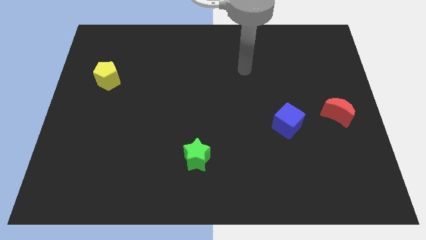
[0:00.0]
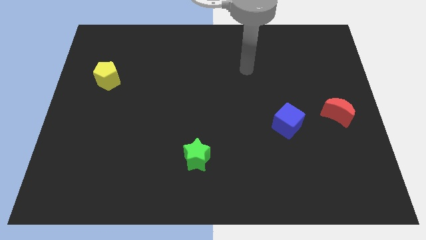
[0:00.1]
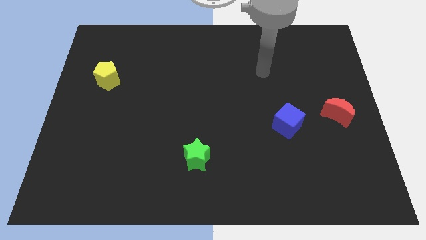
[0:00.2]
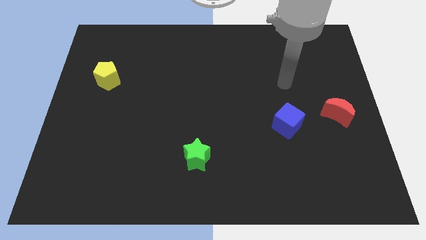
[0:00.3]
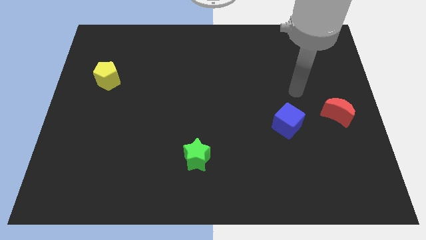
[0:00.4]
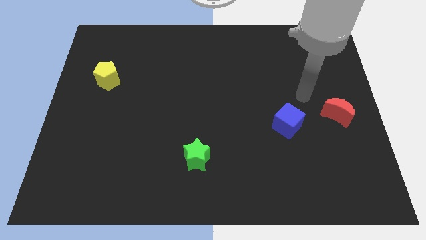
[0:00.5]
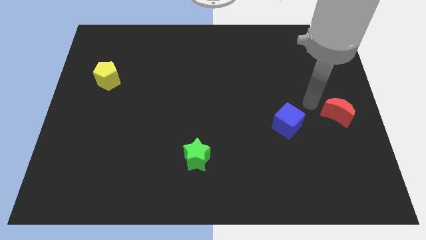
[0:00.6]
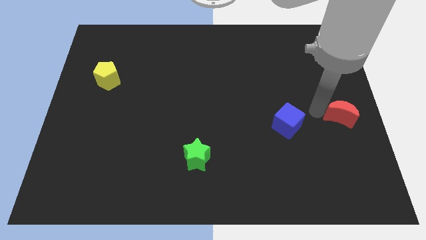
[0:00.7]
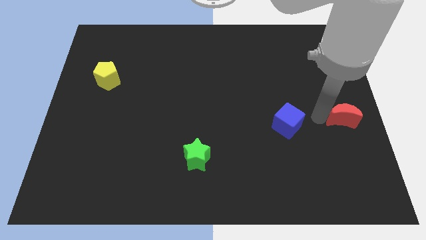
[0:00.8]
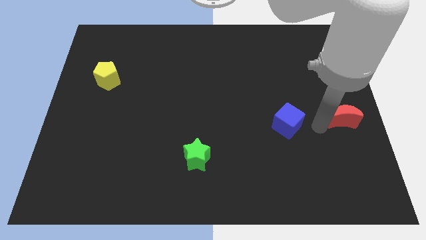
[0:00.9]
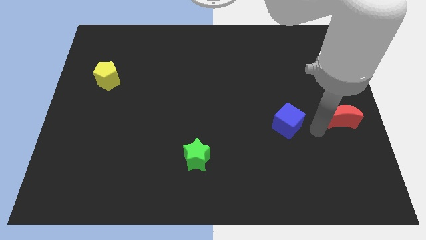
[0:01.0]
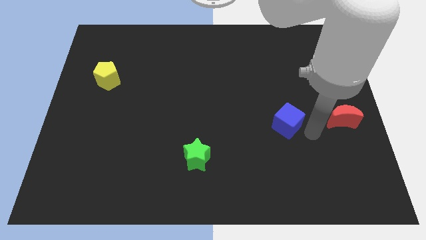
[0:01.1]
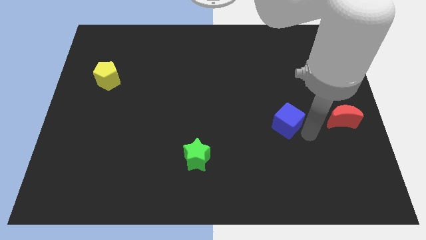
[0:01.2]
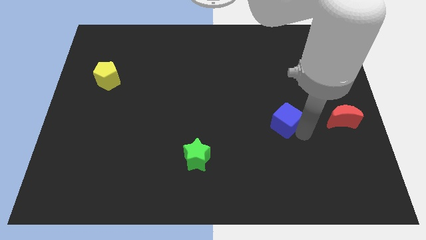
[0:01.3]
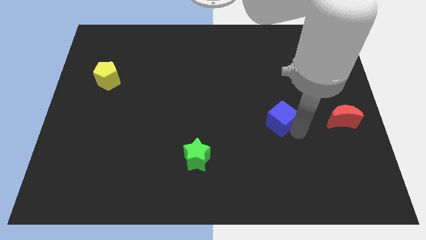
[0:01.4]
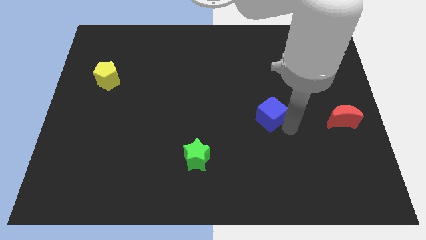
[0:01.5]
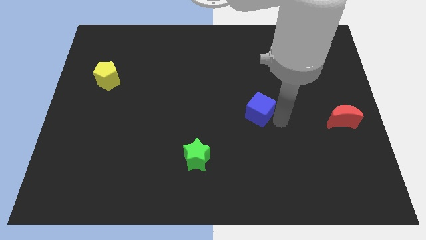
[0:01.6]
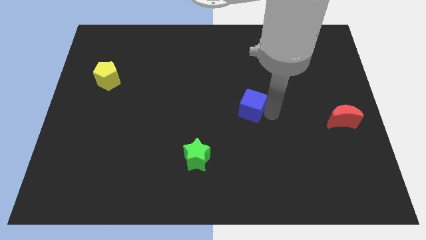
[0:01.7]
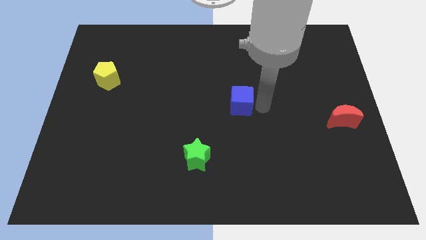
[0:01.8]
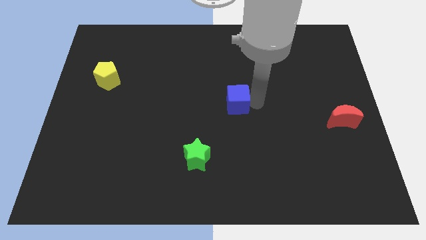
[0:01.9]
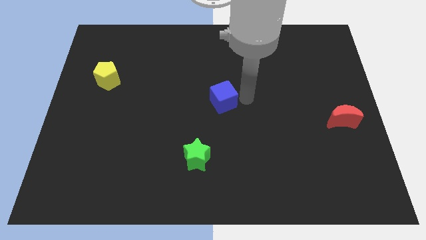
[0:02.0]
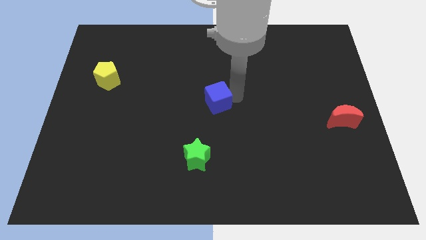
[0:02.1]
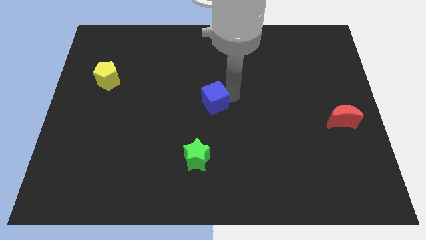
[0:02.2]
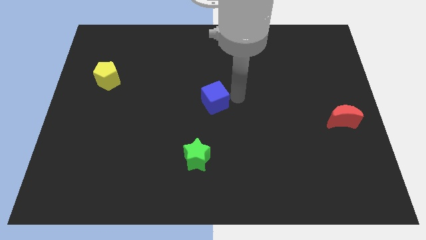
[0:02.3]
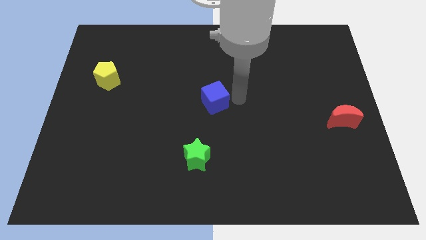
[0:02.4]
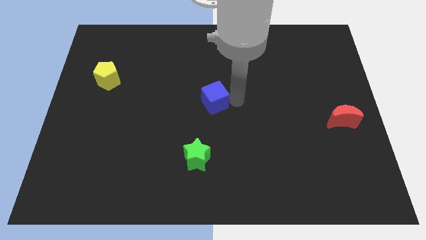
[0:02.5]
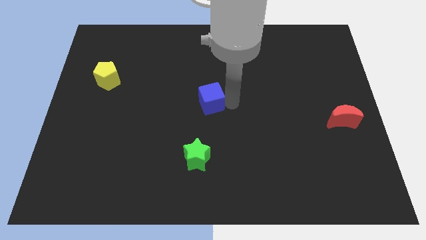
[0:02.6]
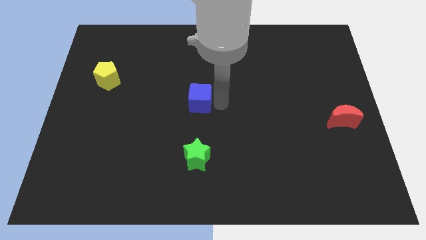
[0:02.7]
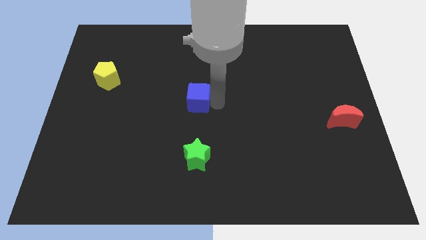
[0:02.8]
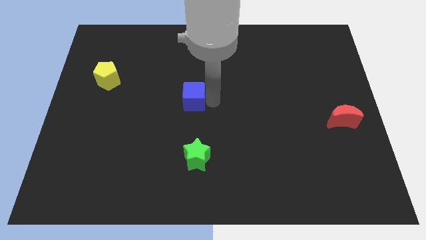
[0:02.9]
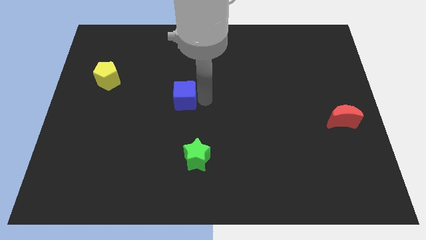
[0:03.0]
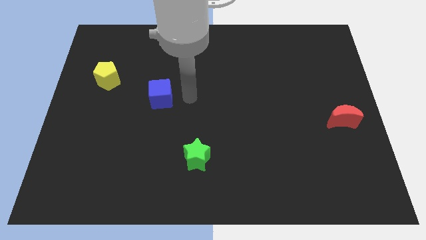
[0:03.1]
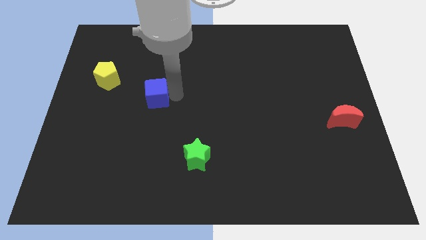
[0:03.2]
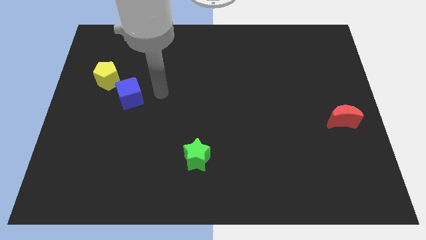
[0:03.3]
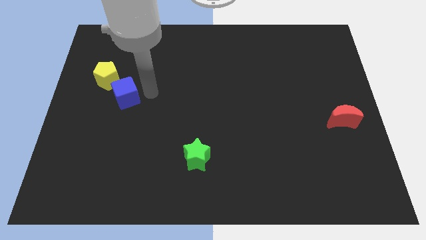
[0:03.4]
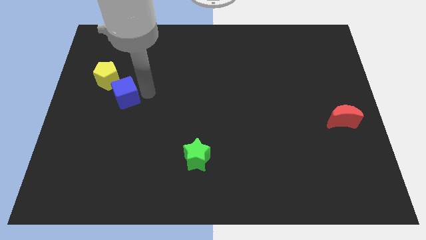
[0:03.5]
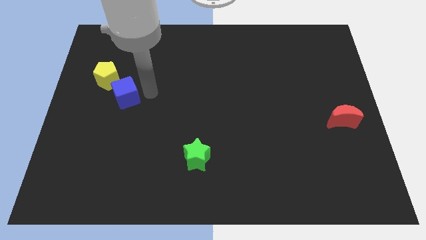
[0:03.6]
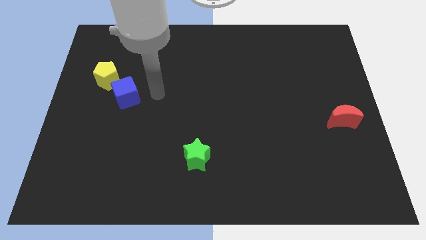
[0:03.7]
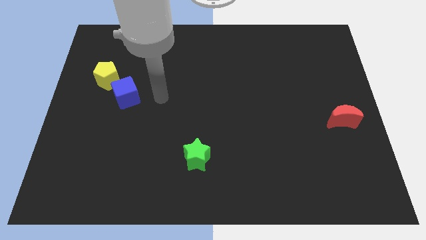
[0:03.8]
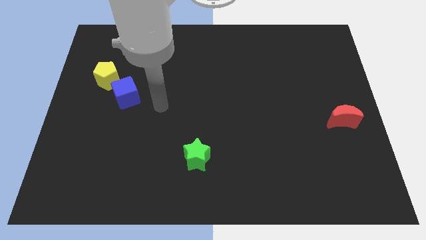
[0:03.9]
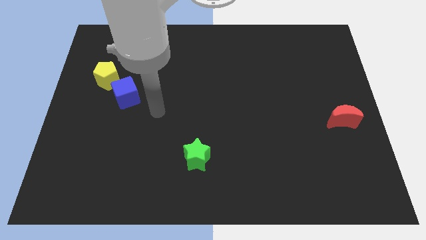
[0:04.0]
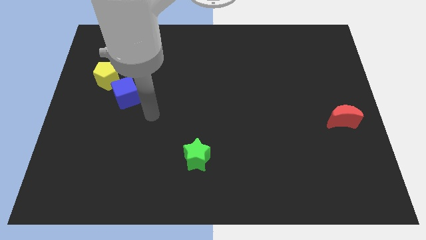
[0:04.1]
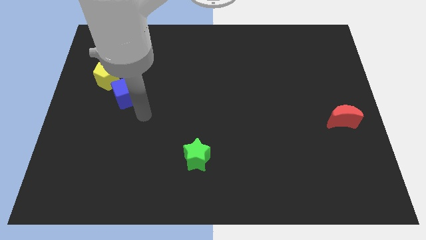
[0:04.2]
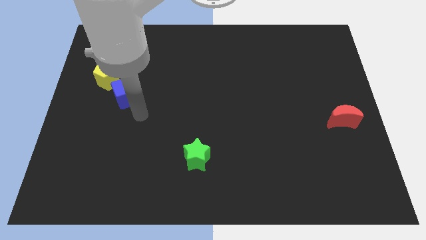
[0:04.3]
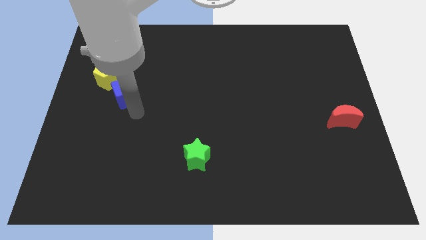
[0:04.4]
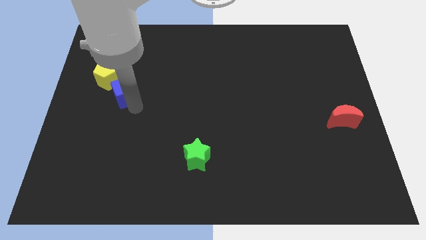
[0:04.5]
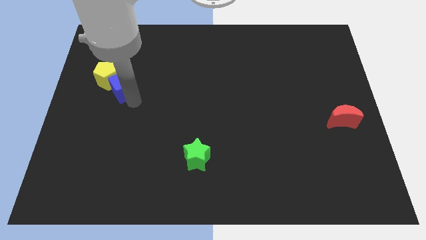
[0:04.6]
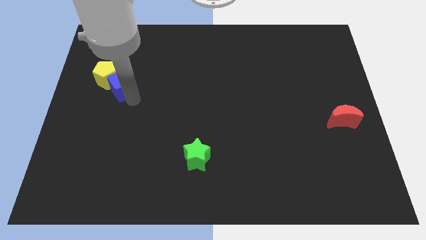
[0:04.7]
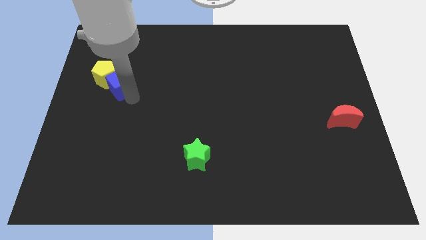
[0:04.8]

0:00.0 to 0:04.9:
slide the cube to the yellow pentagon

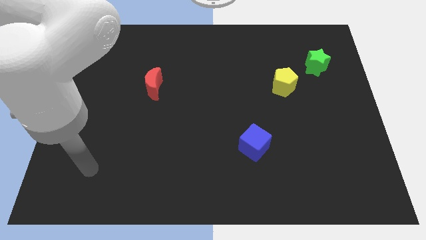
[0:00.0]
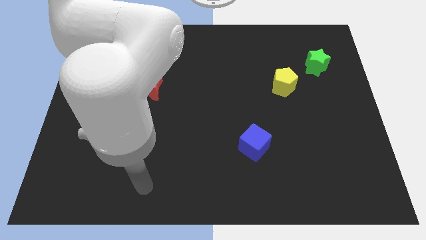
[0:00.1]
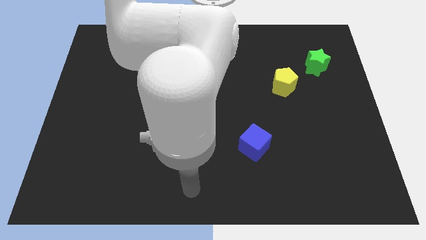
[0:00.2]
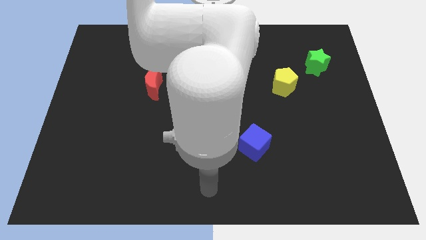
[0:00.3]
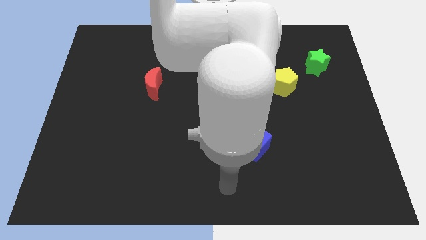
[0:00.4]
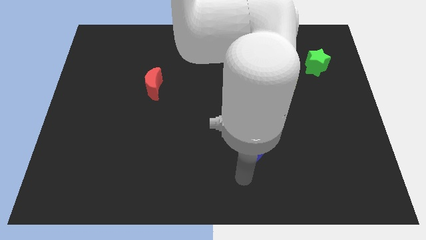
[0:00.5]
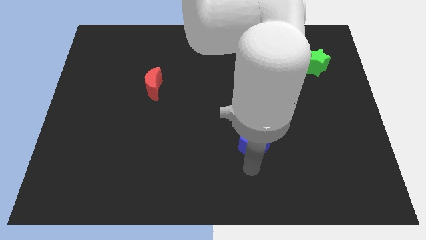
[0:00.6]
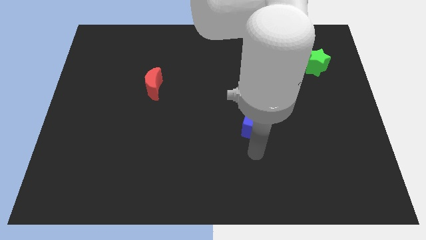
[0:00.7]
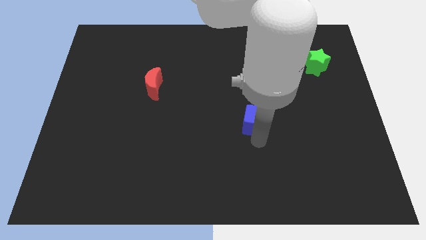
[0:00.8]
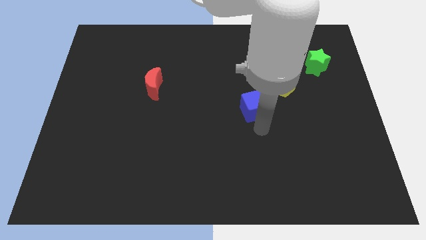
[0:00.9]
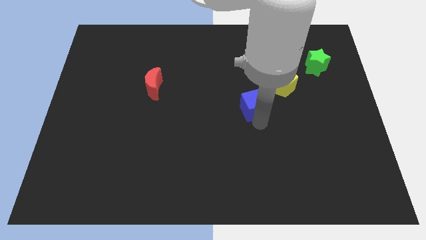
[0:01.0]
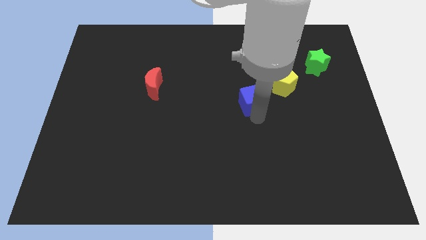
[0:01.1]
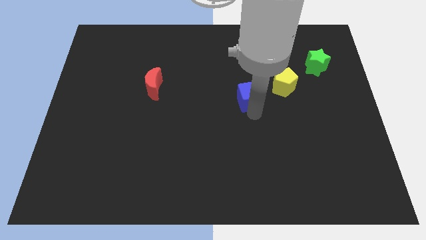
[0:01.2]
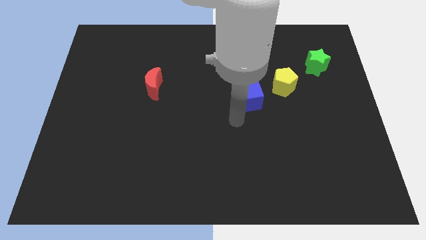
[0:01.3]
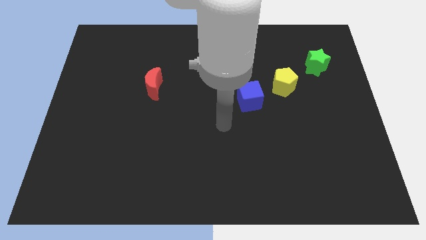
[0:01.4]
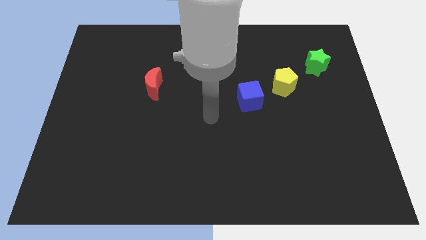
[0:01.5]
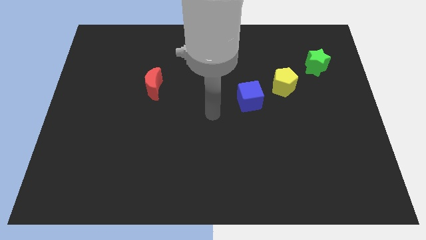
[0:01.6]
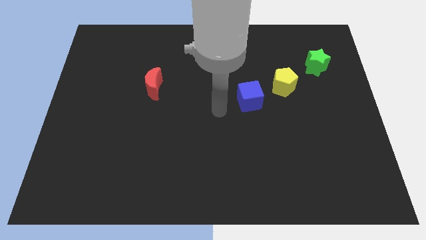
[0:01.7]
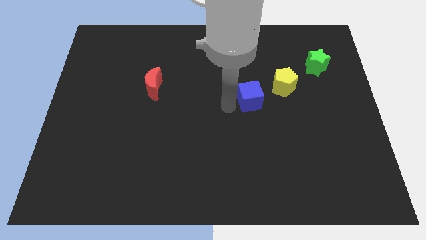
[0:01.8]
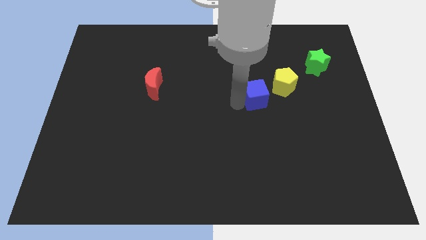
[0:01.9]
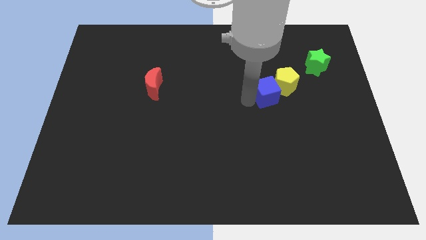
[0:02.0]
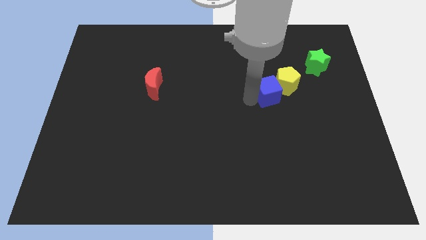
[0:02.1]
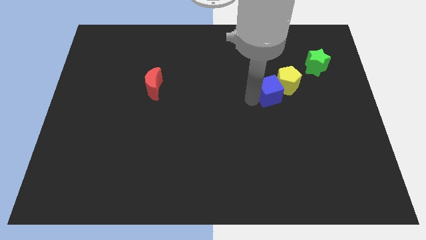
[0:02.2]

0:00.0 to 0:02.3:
put the blue block to the pentagon

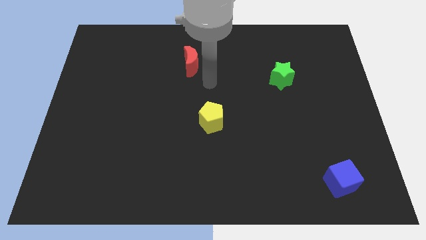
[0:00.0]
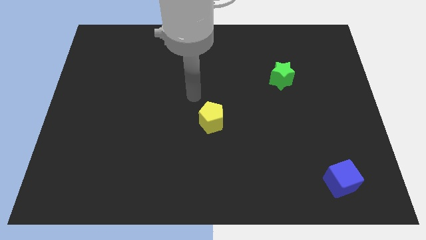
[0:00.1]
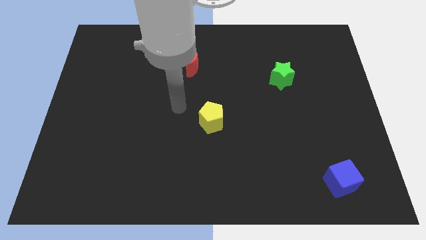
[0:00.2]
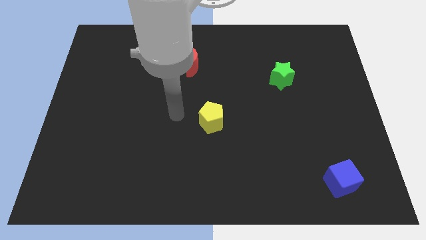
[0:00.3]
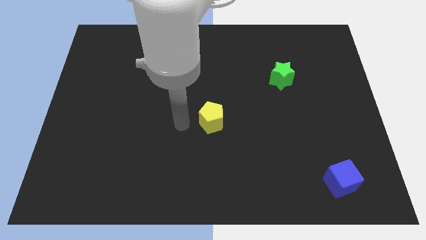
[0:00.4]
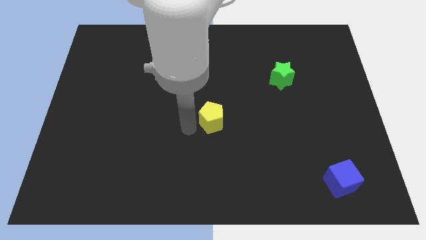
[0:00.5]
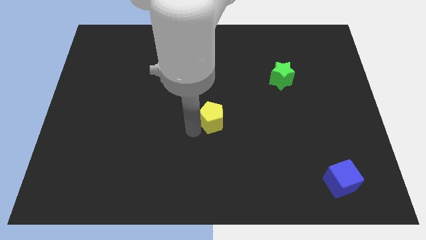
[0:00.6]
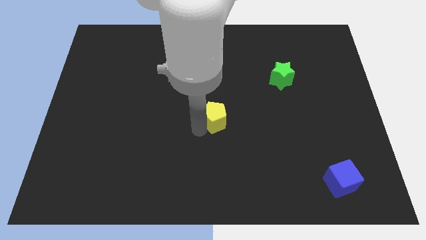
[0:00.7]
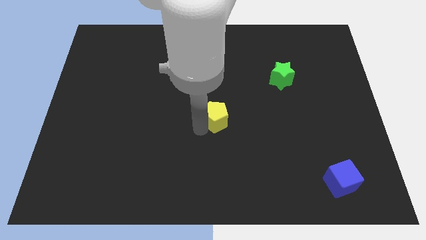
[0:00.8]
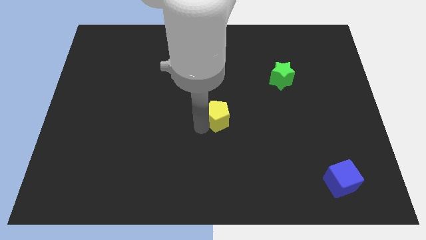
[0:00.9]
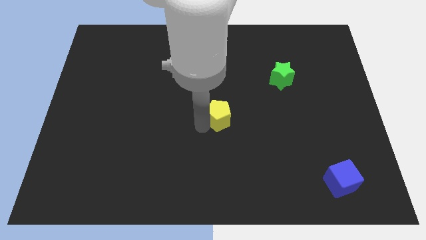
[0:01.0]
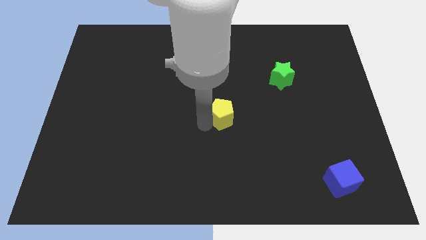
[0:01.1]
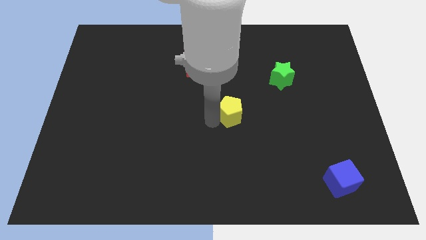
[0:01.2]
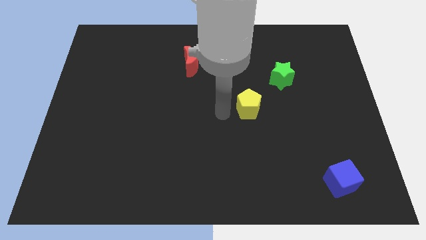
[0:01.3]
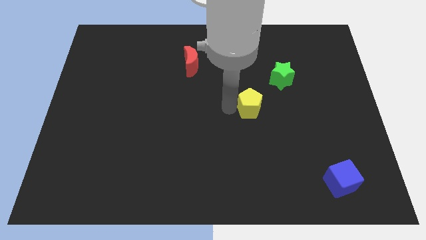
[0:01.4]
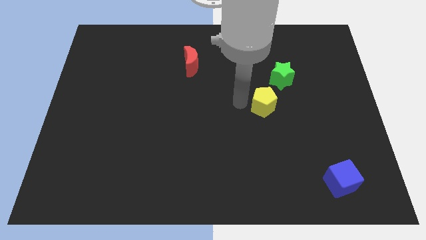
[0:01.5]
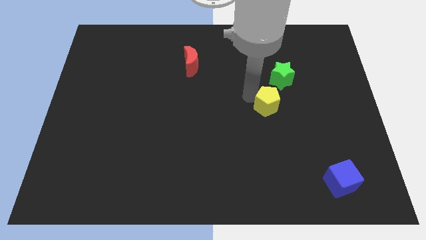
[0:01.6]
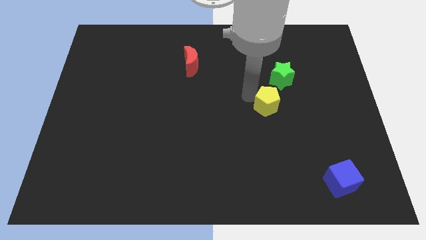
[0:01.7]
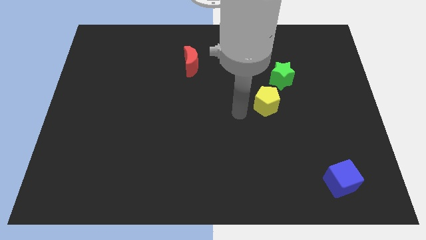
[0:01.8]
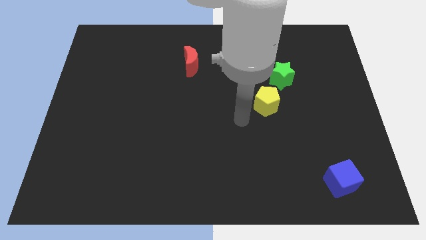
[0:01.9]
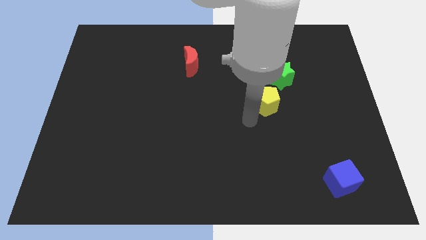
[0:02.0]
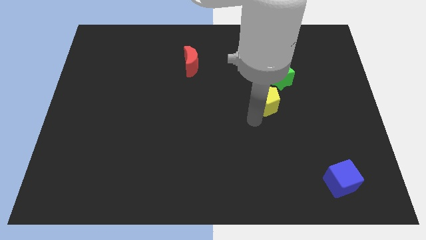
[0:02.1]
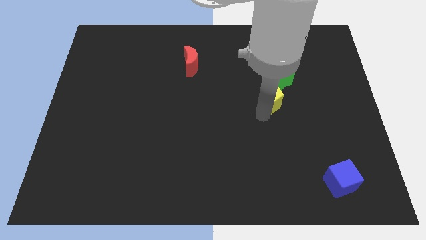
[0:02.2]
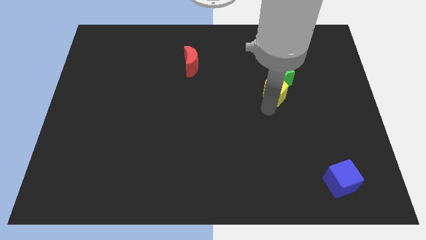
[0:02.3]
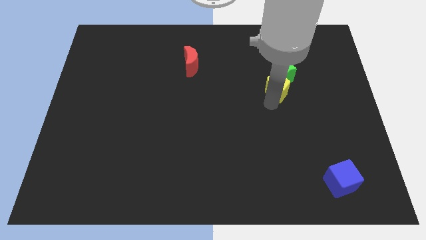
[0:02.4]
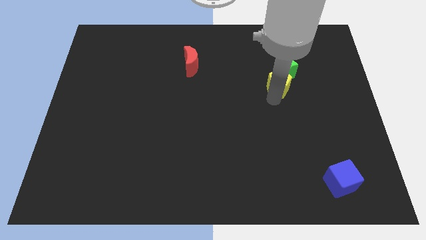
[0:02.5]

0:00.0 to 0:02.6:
push the yellow pentagon close to the green block
